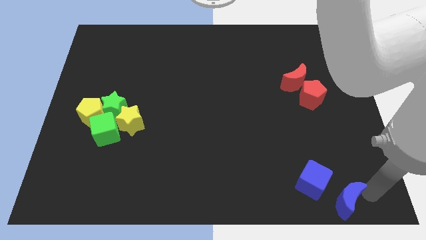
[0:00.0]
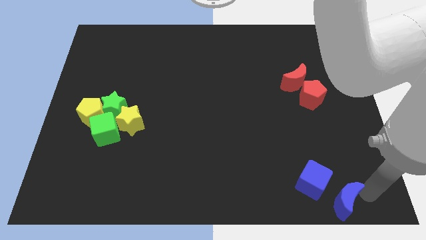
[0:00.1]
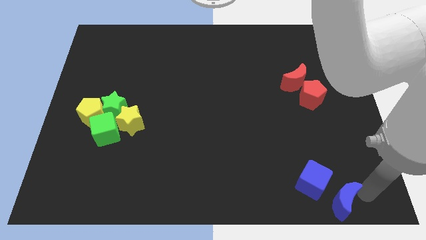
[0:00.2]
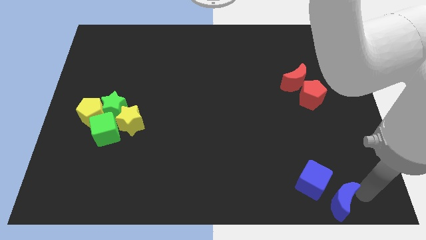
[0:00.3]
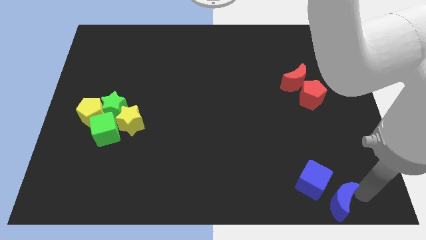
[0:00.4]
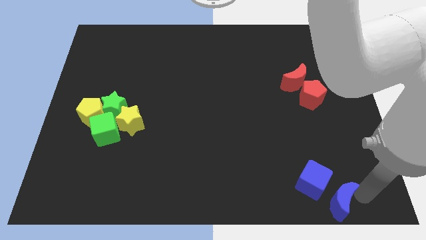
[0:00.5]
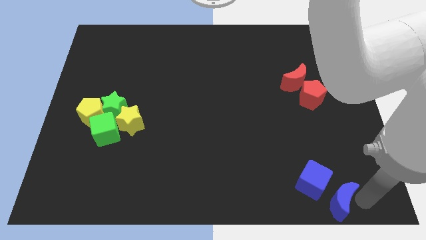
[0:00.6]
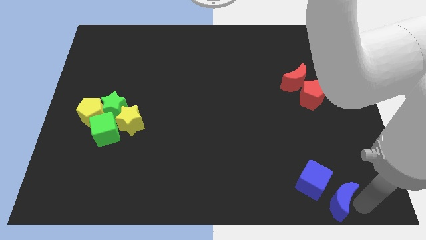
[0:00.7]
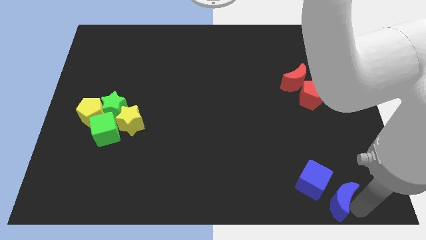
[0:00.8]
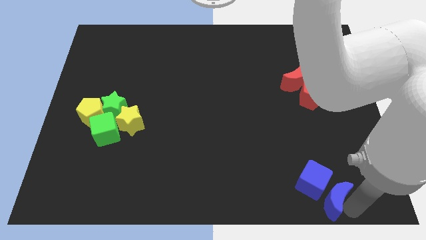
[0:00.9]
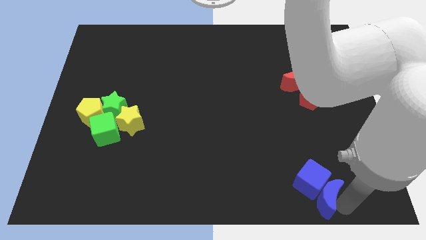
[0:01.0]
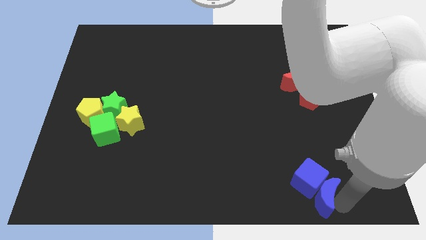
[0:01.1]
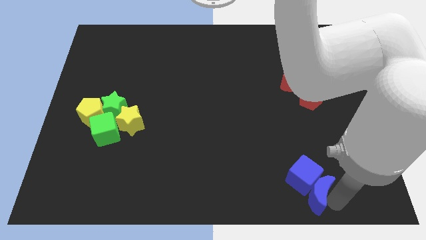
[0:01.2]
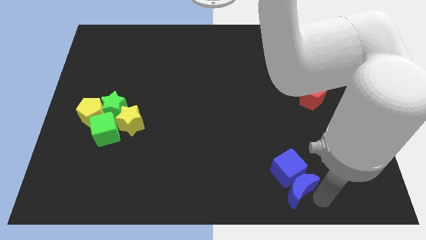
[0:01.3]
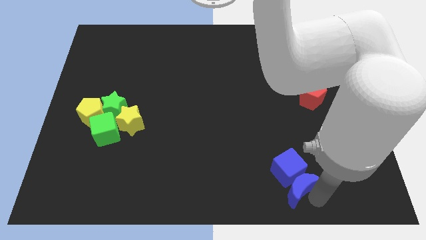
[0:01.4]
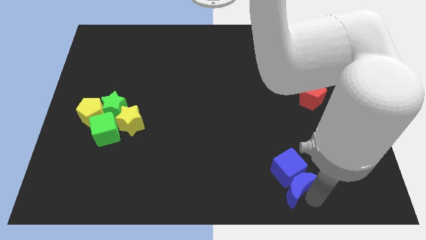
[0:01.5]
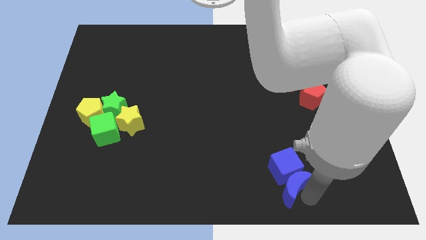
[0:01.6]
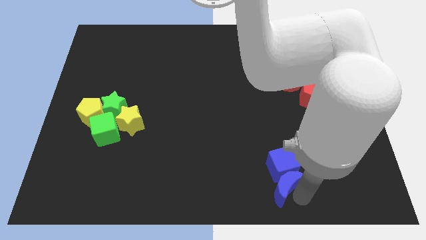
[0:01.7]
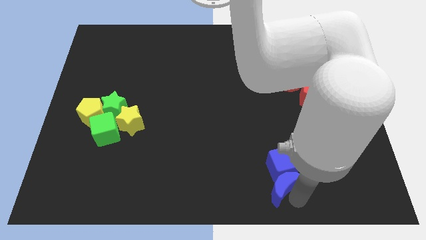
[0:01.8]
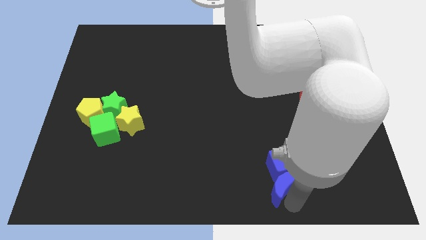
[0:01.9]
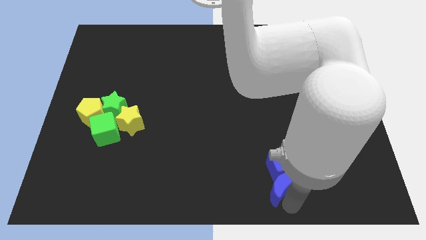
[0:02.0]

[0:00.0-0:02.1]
push the blue blocks towards left side

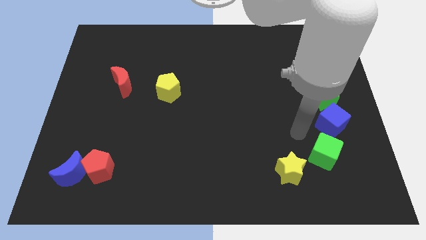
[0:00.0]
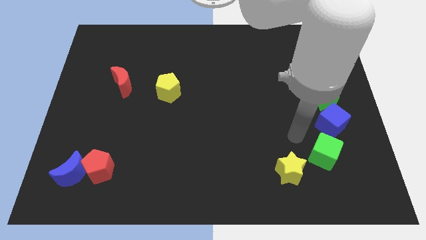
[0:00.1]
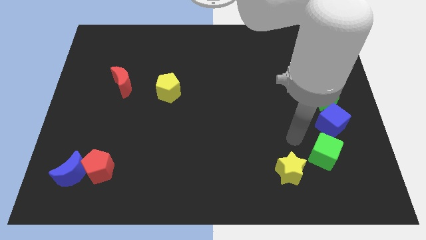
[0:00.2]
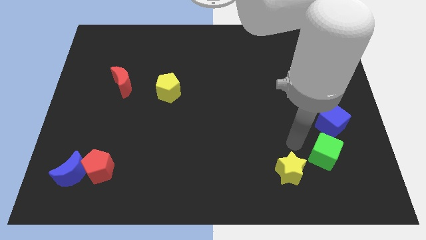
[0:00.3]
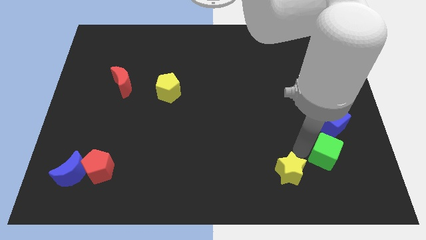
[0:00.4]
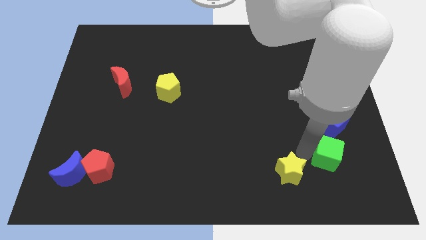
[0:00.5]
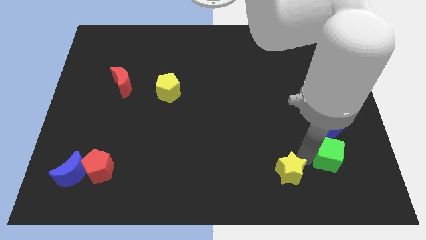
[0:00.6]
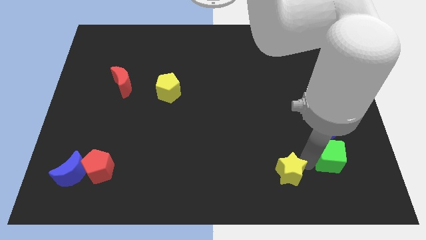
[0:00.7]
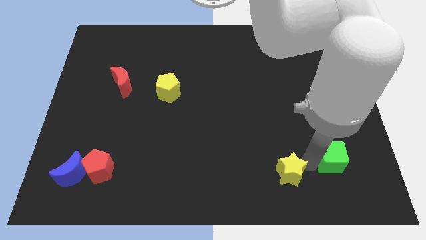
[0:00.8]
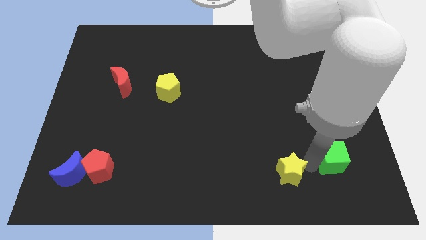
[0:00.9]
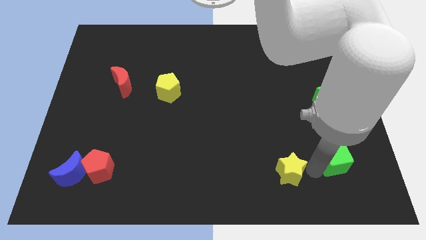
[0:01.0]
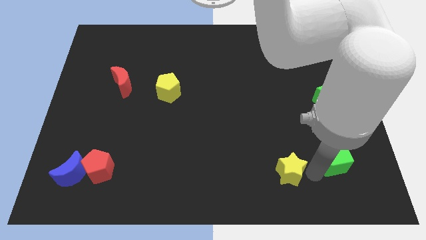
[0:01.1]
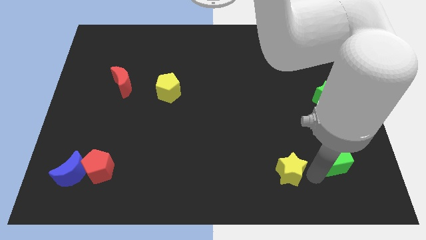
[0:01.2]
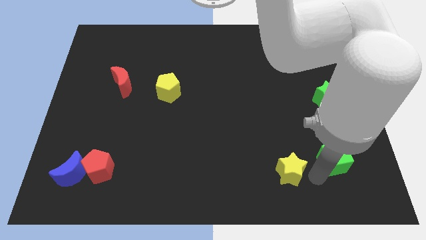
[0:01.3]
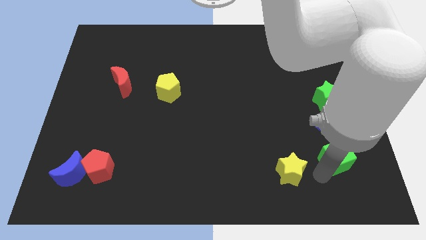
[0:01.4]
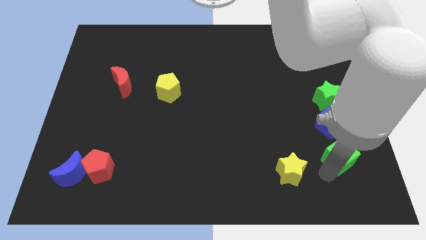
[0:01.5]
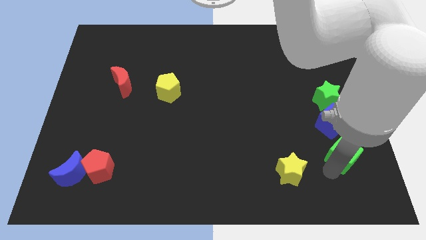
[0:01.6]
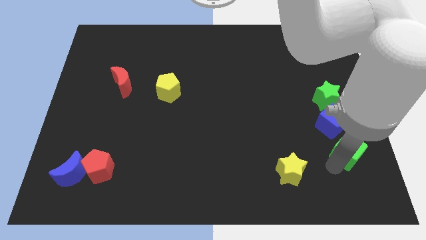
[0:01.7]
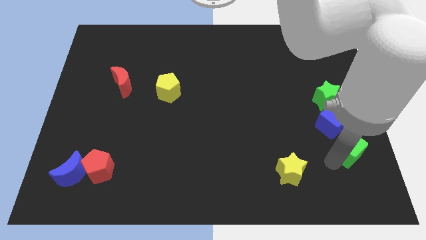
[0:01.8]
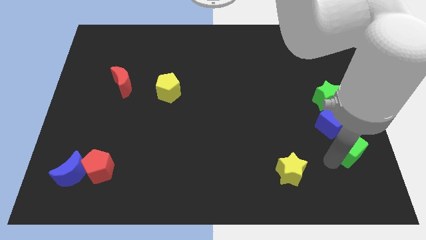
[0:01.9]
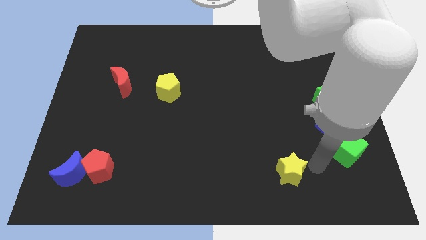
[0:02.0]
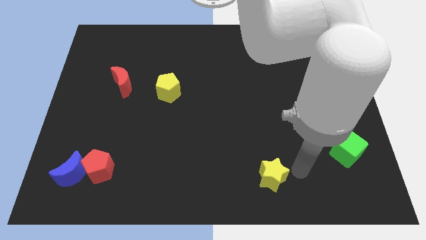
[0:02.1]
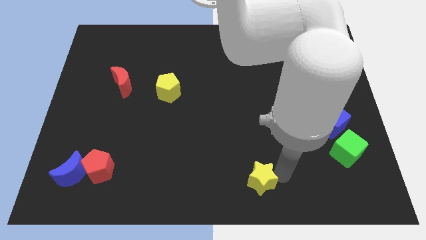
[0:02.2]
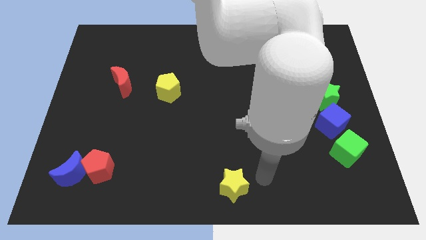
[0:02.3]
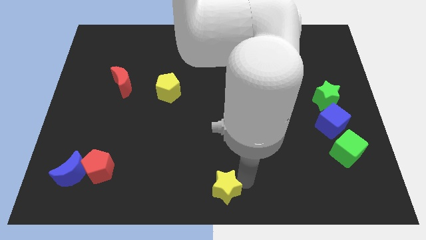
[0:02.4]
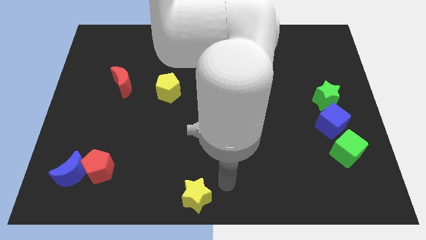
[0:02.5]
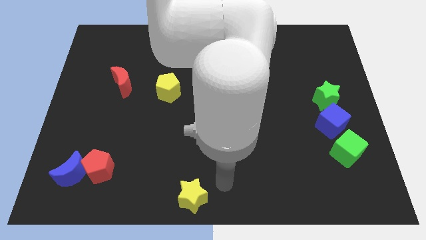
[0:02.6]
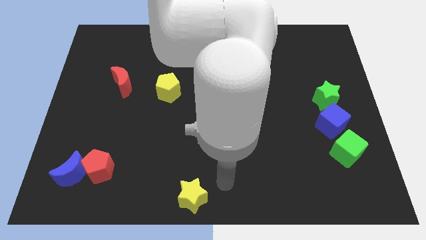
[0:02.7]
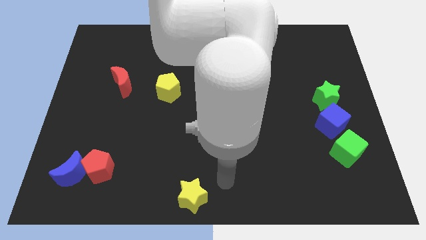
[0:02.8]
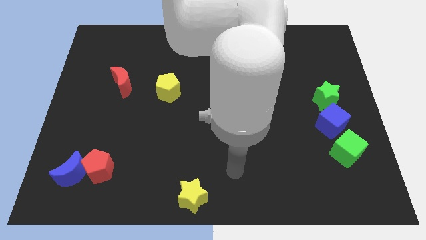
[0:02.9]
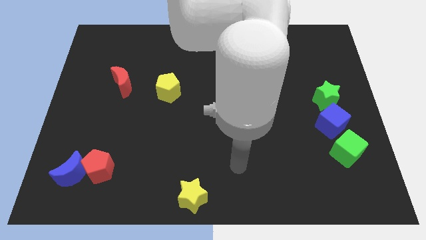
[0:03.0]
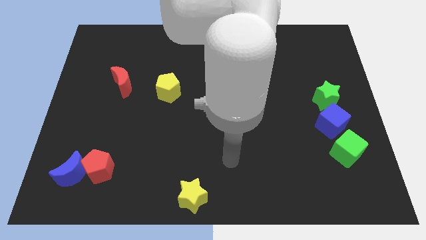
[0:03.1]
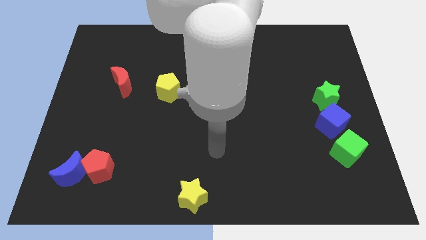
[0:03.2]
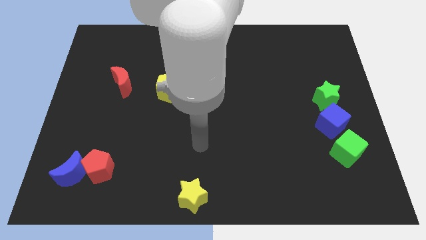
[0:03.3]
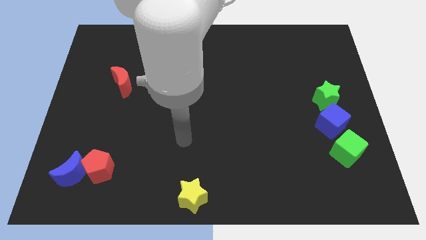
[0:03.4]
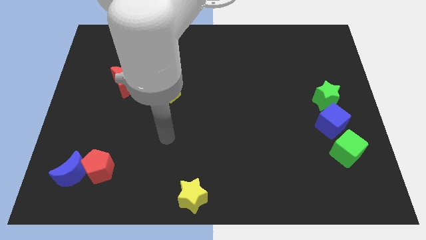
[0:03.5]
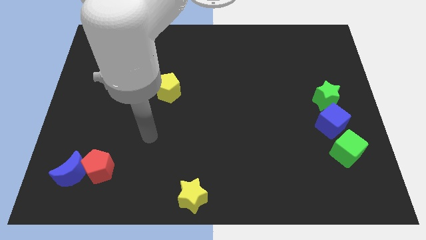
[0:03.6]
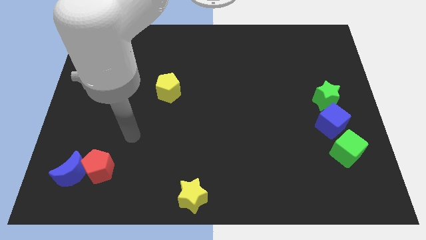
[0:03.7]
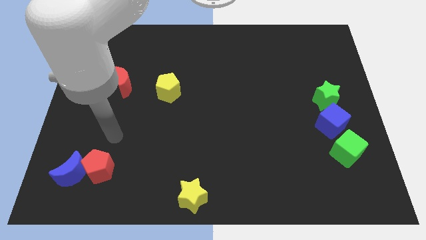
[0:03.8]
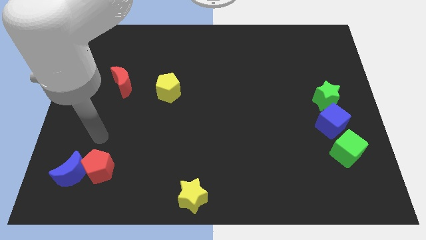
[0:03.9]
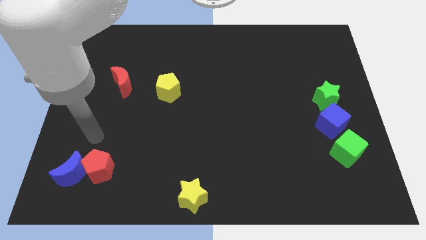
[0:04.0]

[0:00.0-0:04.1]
move the yellow star to the bottom center of the board

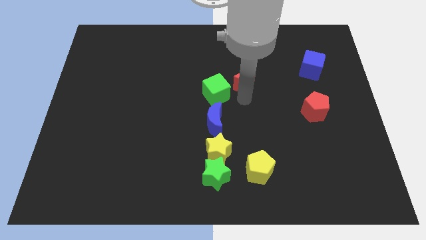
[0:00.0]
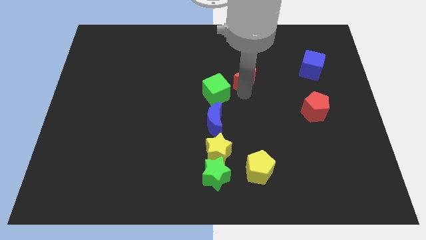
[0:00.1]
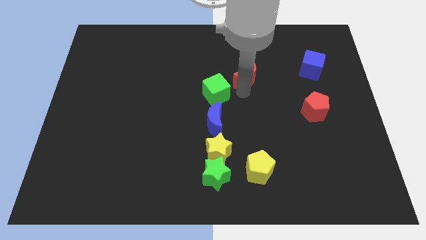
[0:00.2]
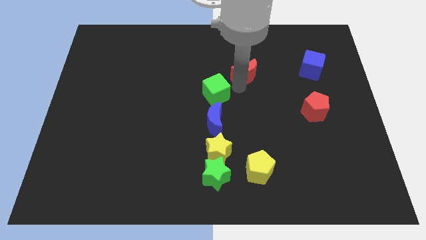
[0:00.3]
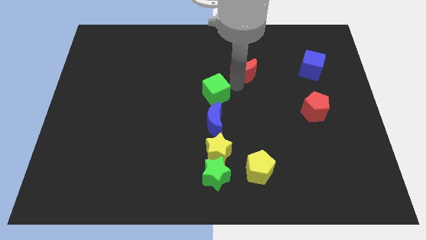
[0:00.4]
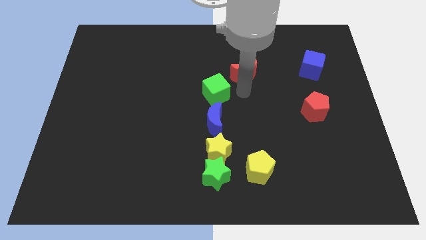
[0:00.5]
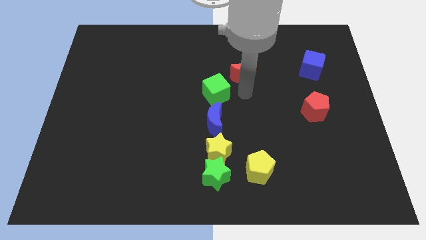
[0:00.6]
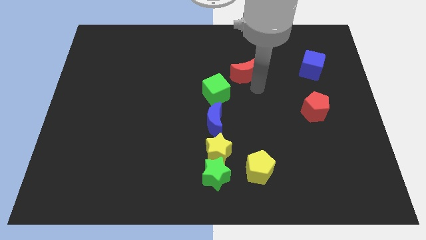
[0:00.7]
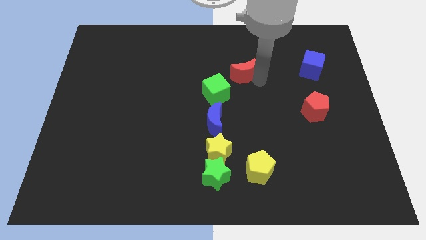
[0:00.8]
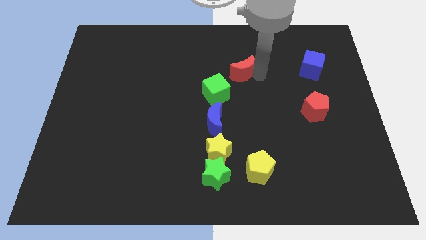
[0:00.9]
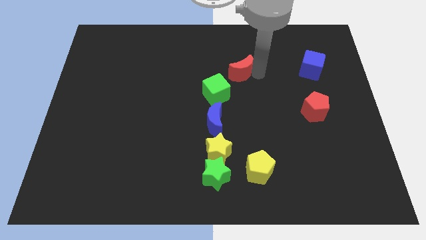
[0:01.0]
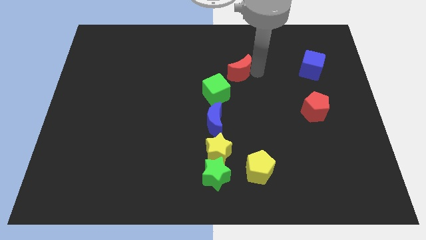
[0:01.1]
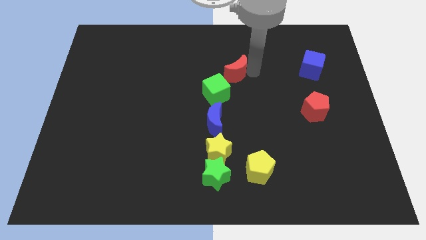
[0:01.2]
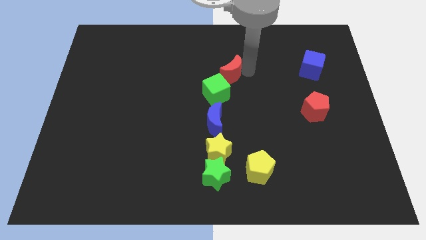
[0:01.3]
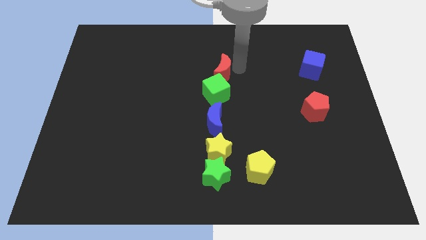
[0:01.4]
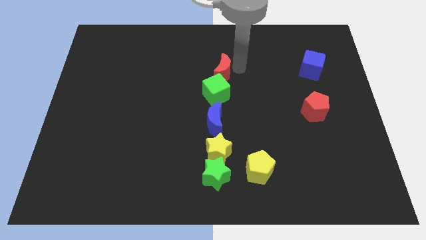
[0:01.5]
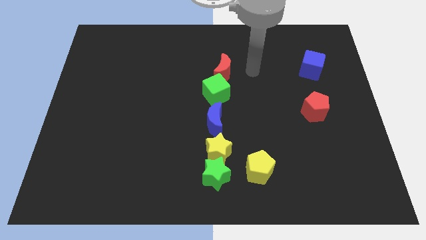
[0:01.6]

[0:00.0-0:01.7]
place the red crescent on top of the green cube

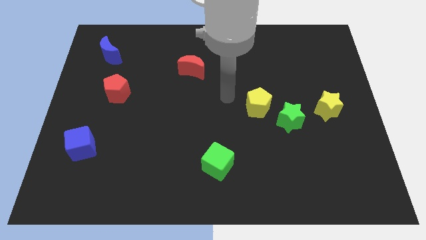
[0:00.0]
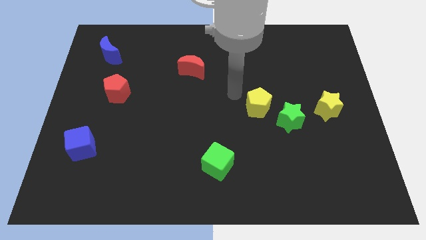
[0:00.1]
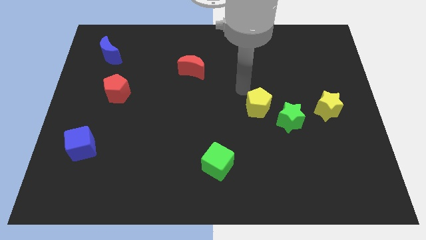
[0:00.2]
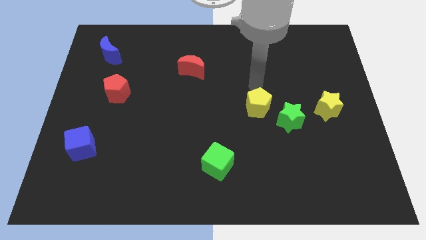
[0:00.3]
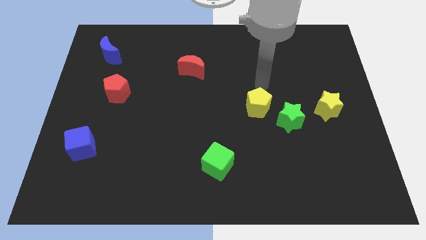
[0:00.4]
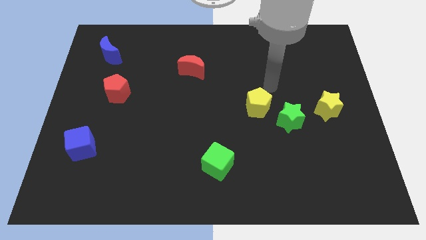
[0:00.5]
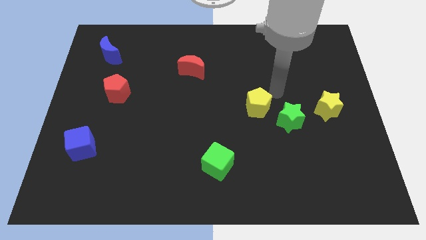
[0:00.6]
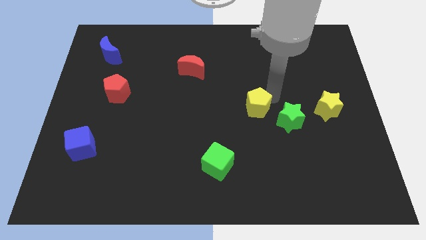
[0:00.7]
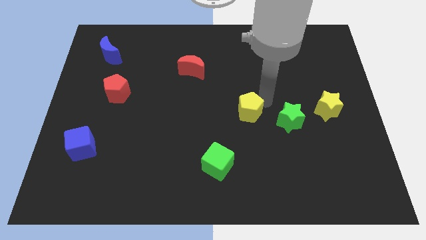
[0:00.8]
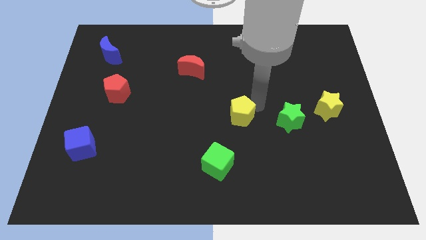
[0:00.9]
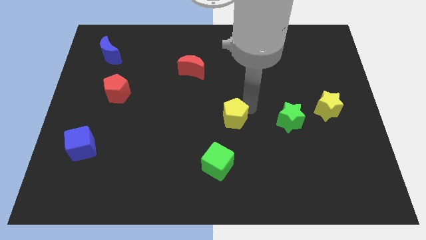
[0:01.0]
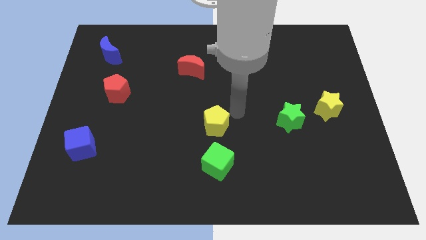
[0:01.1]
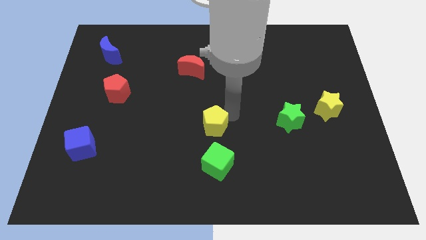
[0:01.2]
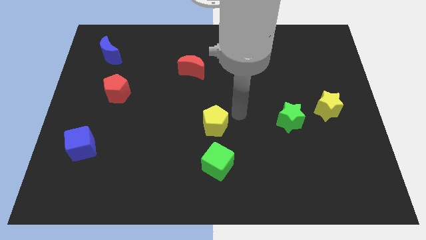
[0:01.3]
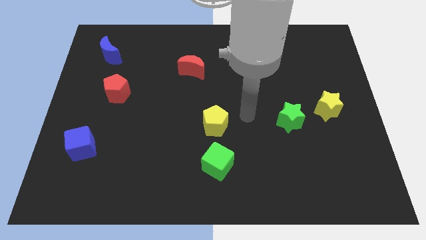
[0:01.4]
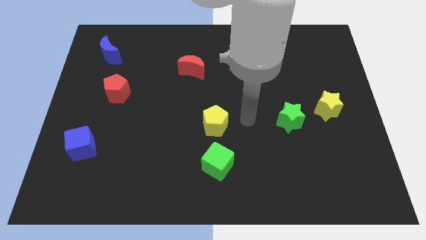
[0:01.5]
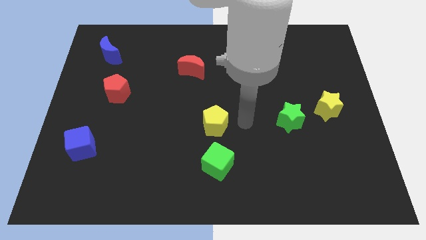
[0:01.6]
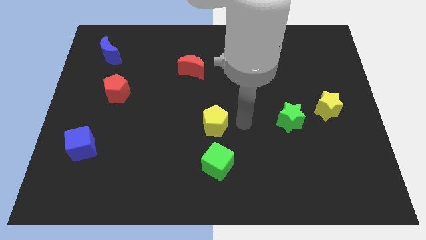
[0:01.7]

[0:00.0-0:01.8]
place the yellow pentagon at the center
